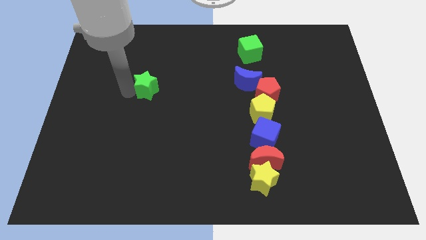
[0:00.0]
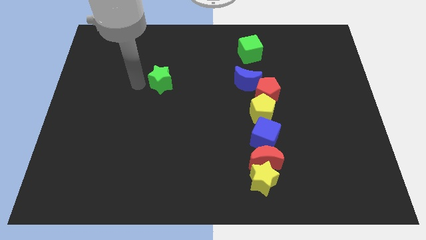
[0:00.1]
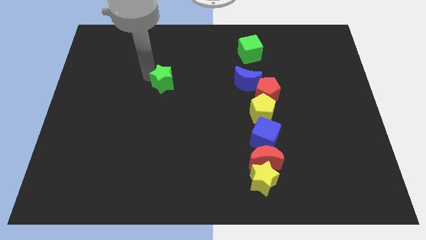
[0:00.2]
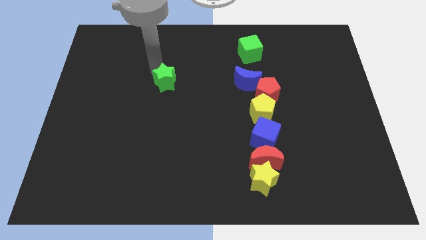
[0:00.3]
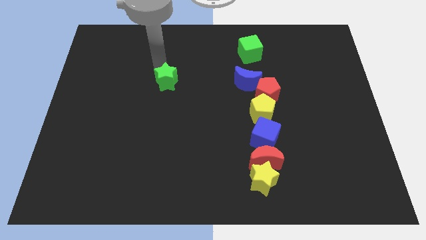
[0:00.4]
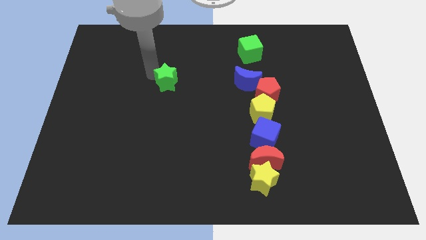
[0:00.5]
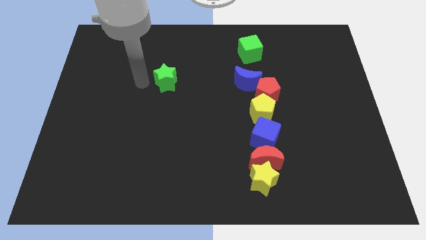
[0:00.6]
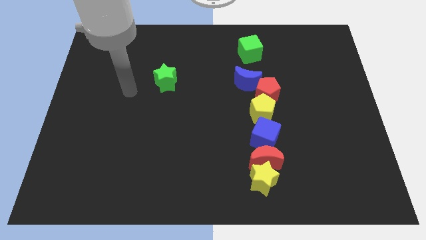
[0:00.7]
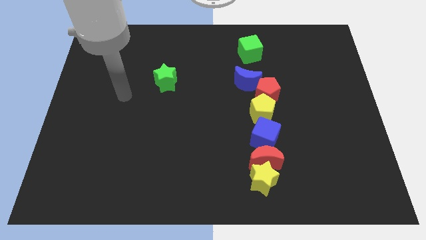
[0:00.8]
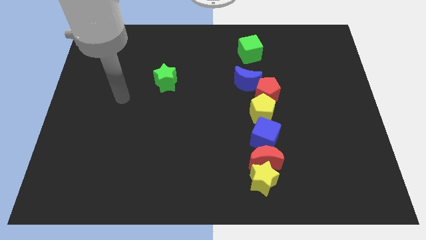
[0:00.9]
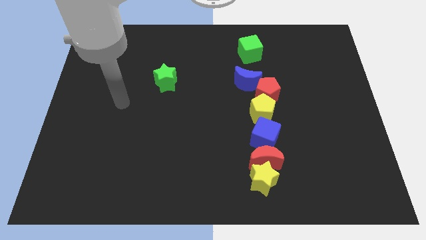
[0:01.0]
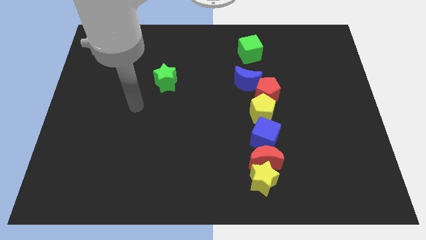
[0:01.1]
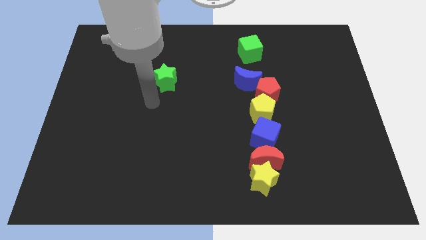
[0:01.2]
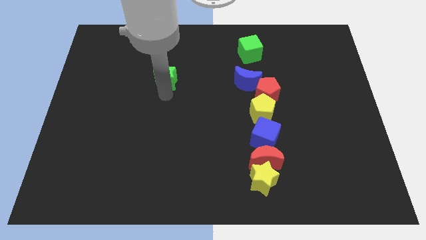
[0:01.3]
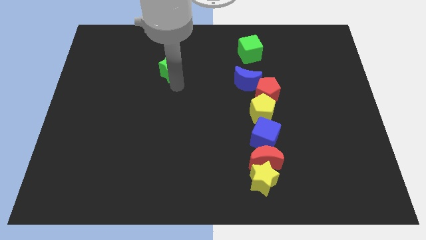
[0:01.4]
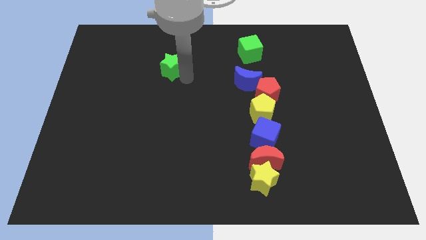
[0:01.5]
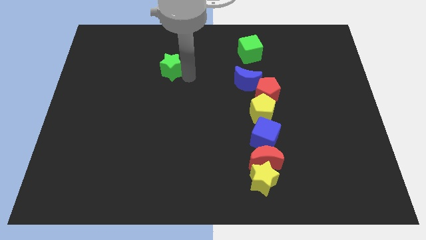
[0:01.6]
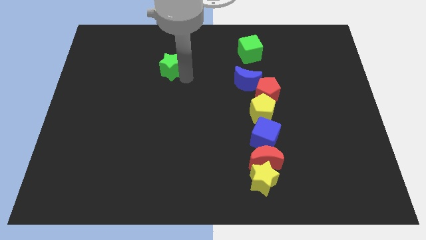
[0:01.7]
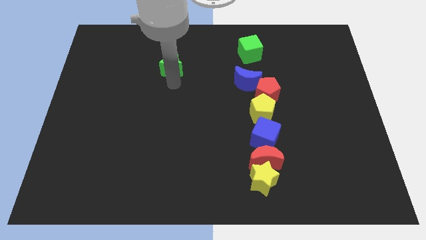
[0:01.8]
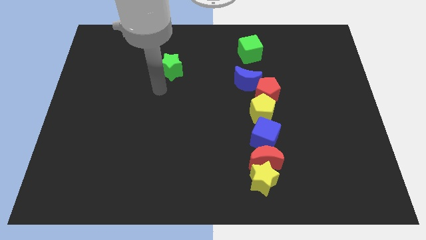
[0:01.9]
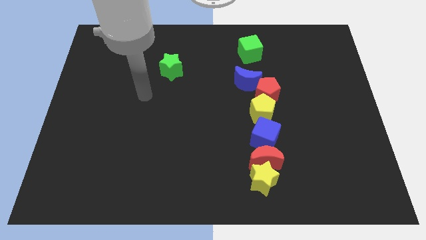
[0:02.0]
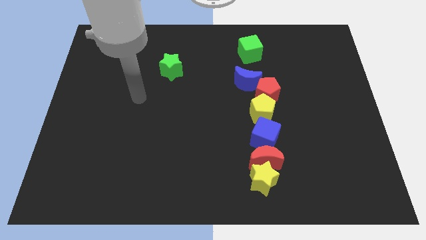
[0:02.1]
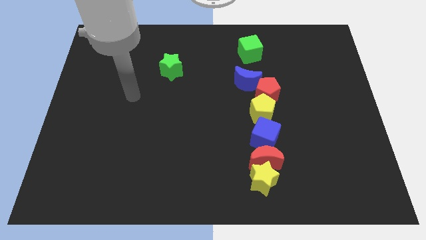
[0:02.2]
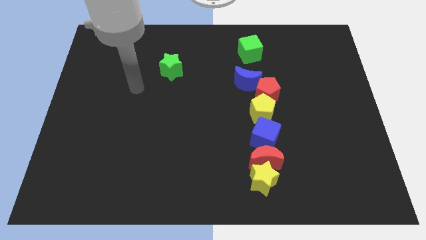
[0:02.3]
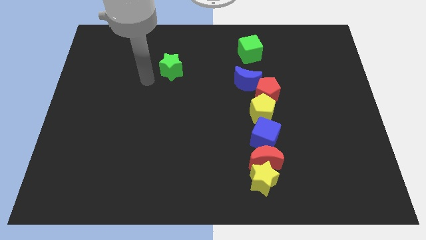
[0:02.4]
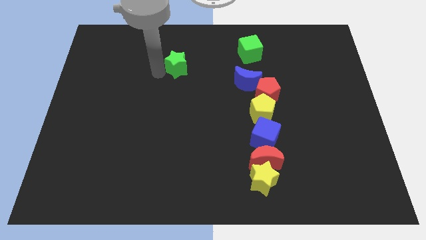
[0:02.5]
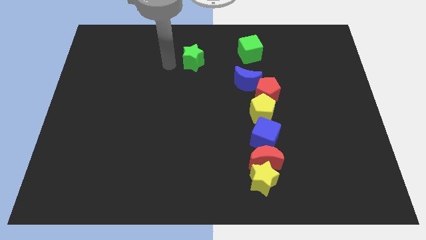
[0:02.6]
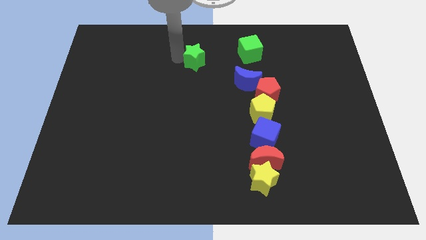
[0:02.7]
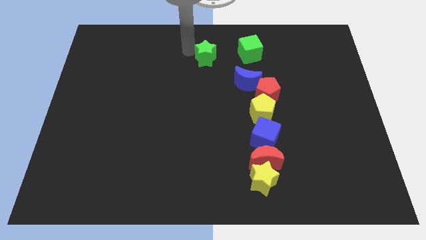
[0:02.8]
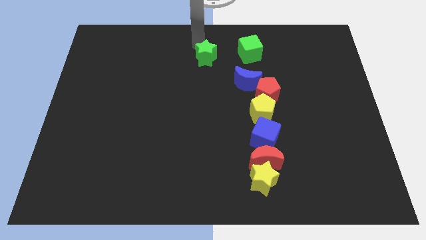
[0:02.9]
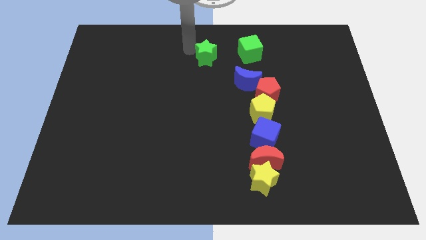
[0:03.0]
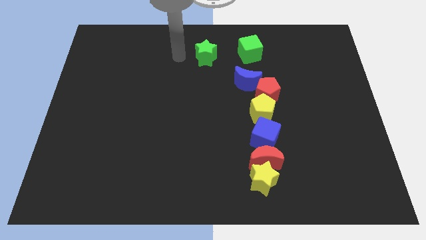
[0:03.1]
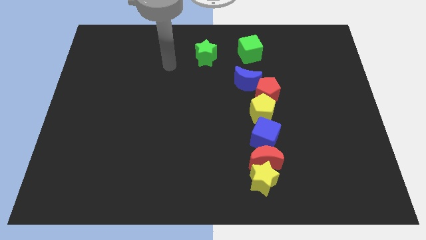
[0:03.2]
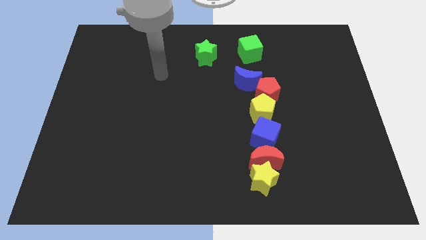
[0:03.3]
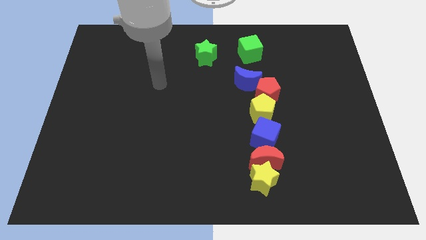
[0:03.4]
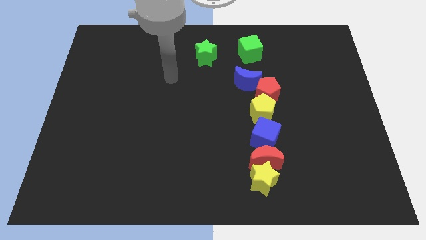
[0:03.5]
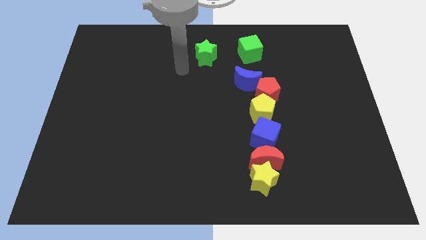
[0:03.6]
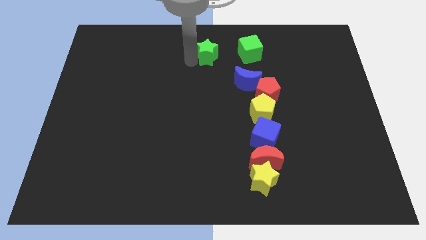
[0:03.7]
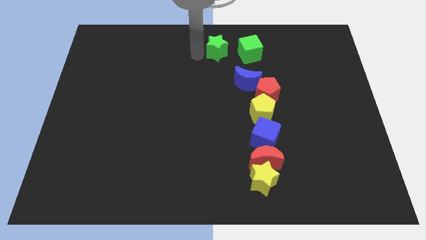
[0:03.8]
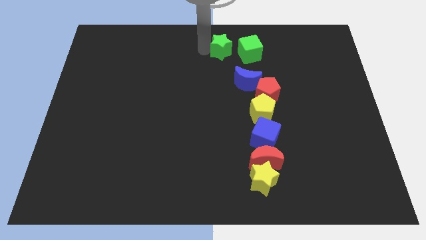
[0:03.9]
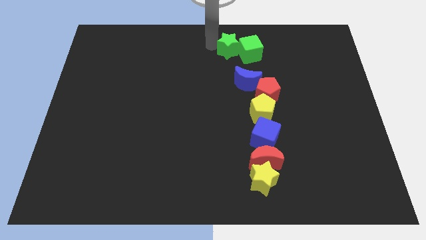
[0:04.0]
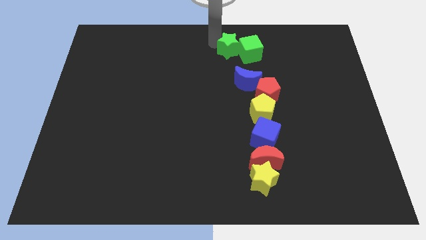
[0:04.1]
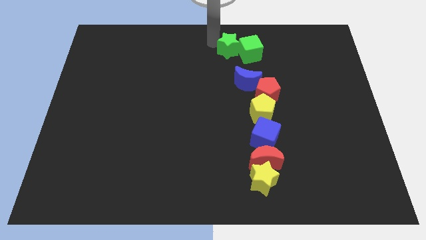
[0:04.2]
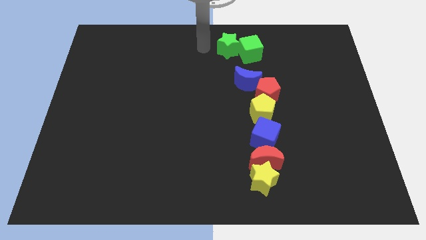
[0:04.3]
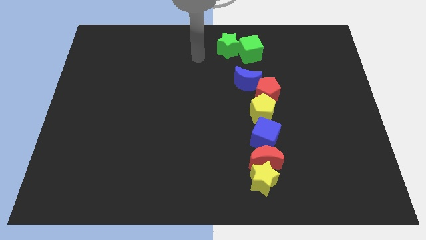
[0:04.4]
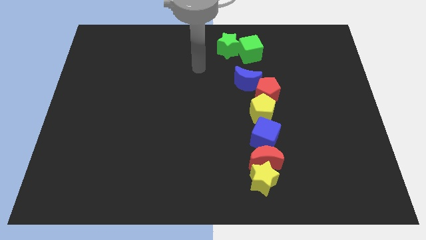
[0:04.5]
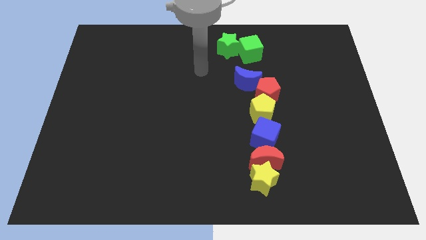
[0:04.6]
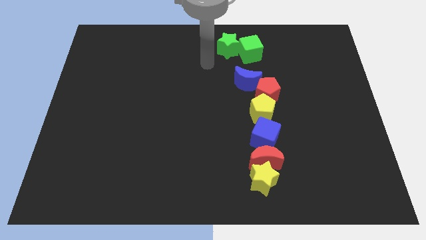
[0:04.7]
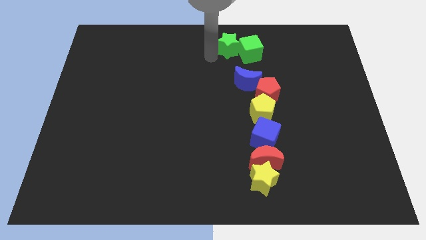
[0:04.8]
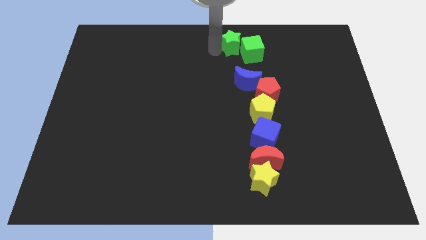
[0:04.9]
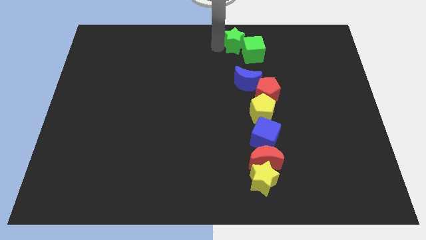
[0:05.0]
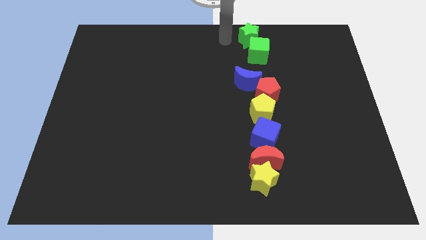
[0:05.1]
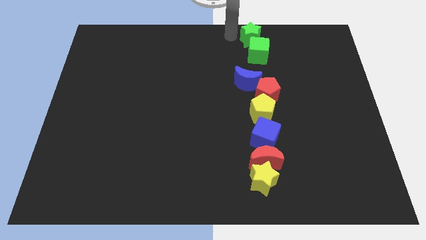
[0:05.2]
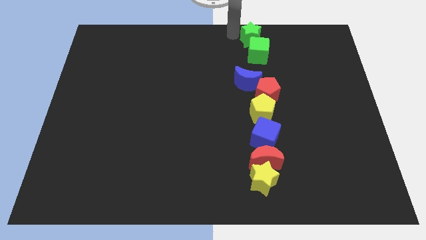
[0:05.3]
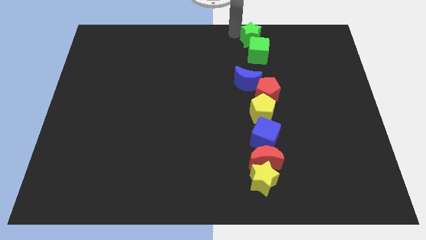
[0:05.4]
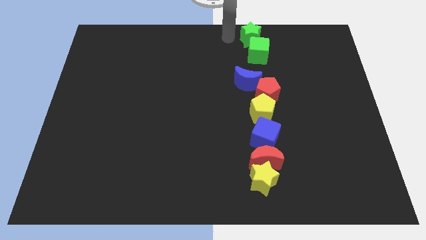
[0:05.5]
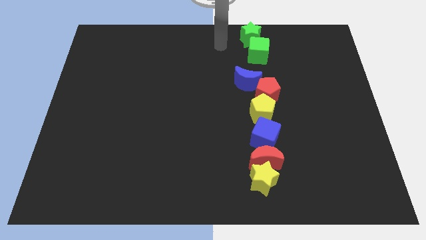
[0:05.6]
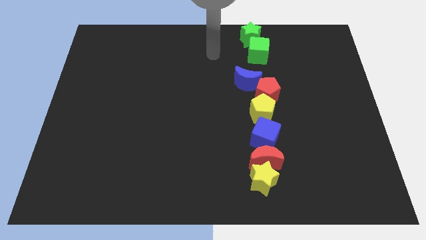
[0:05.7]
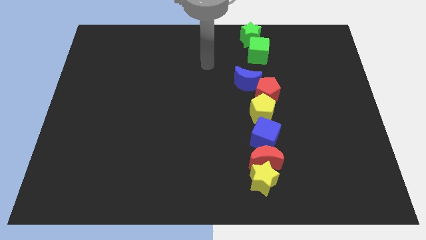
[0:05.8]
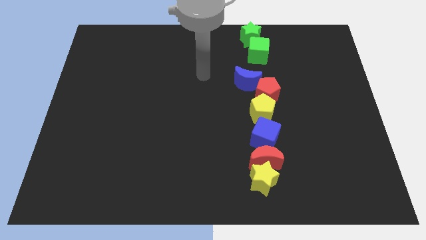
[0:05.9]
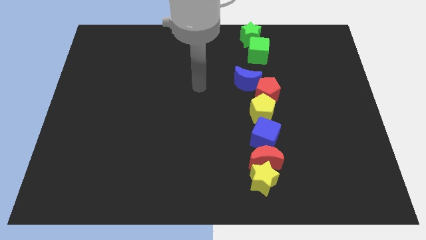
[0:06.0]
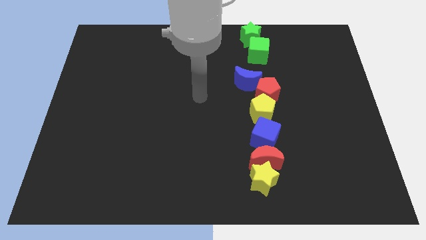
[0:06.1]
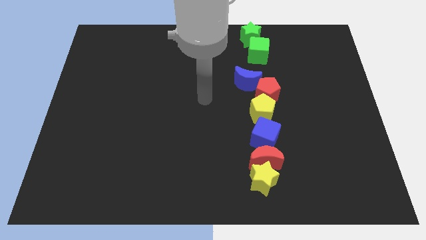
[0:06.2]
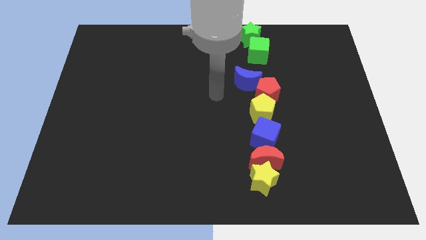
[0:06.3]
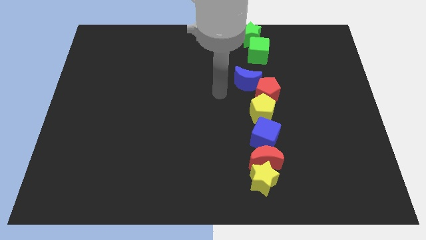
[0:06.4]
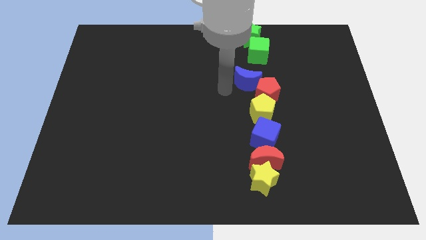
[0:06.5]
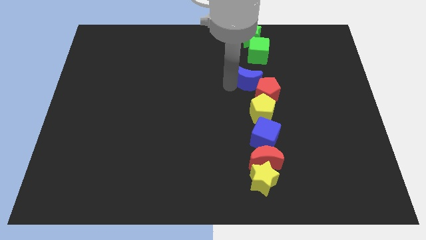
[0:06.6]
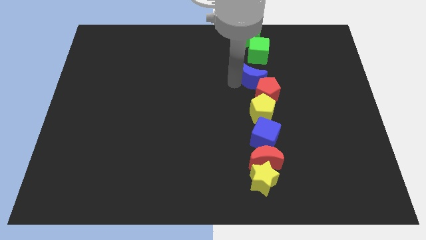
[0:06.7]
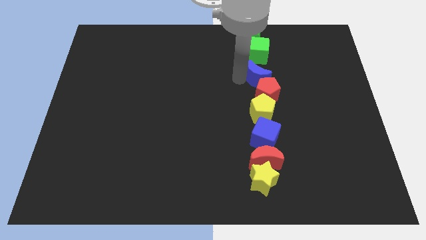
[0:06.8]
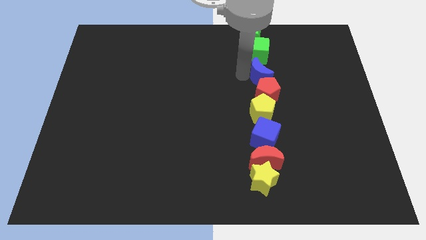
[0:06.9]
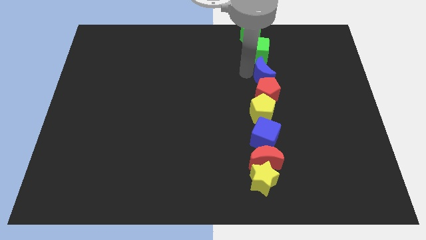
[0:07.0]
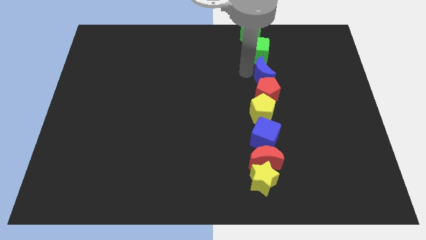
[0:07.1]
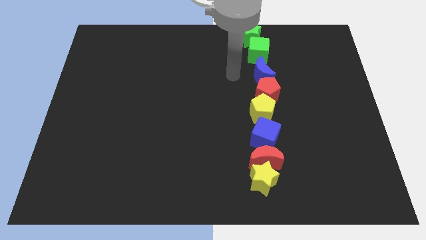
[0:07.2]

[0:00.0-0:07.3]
place the green blocks and blue crescent in the line

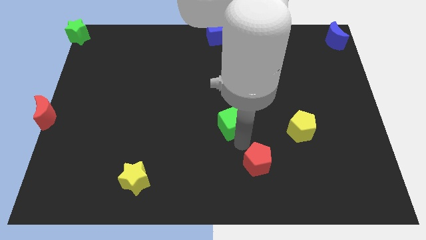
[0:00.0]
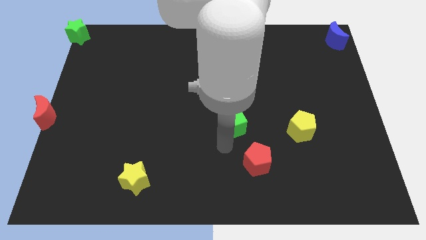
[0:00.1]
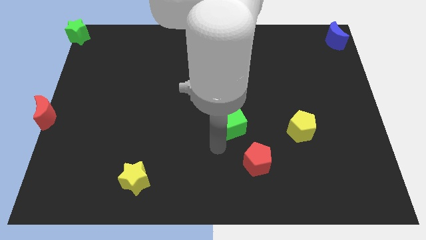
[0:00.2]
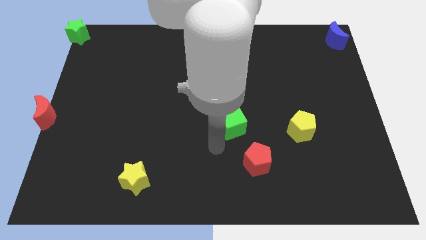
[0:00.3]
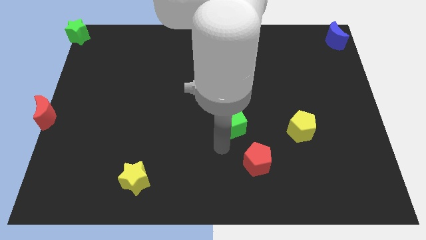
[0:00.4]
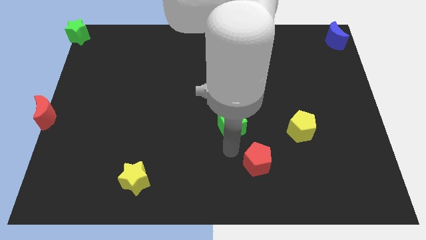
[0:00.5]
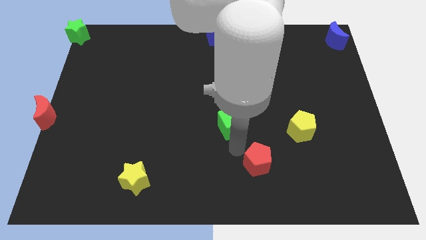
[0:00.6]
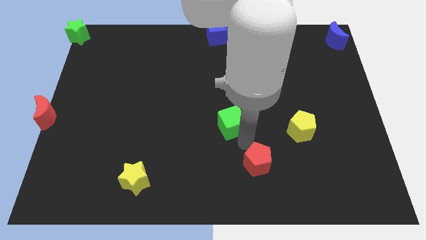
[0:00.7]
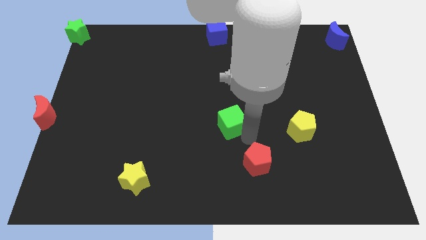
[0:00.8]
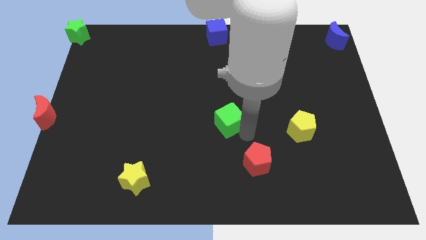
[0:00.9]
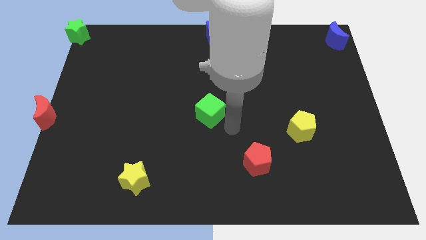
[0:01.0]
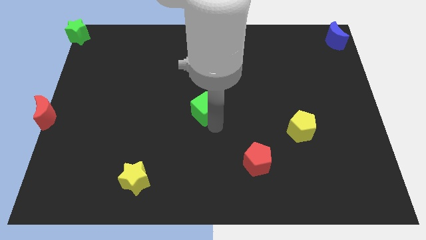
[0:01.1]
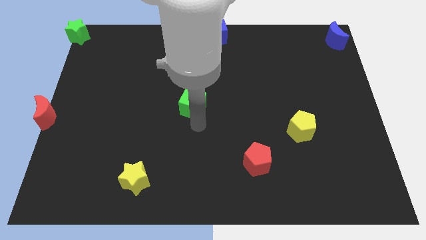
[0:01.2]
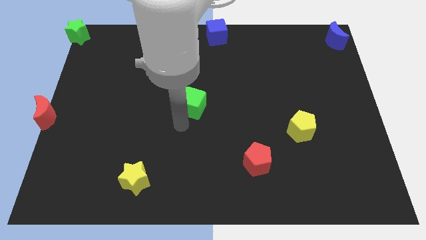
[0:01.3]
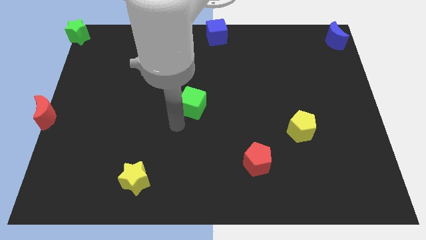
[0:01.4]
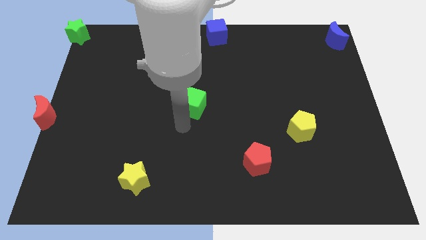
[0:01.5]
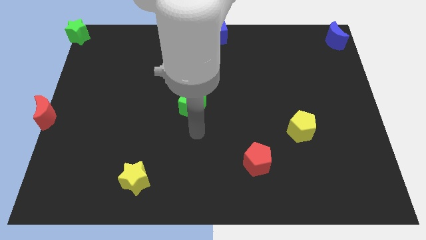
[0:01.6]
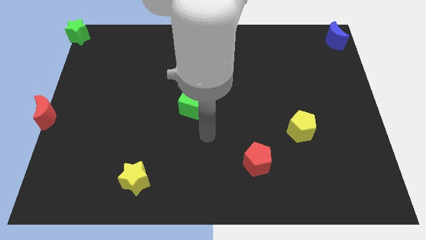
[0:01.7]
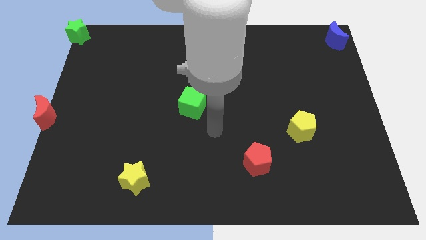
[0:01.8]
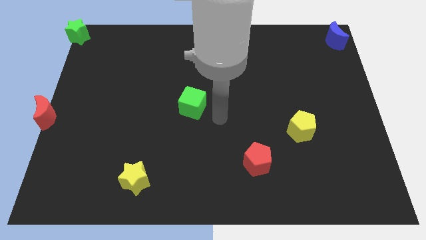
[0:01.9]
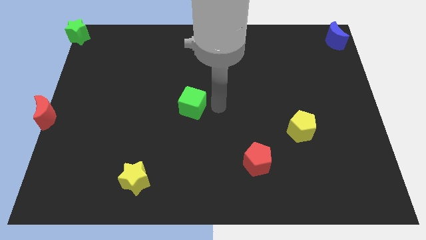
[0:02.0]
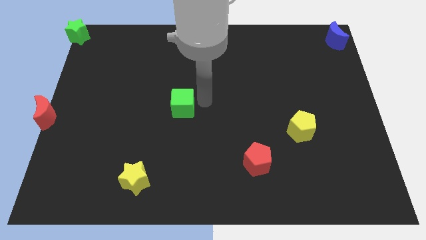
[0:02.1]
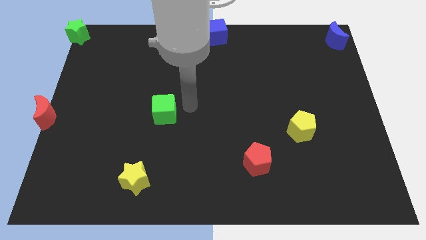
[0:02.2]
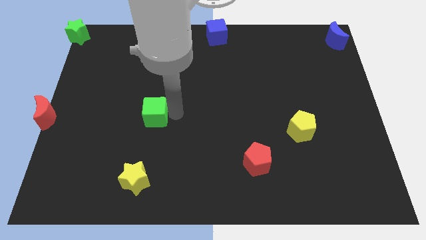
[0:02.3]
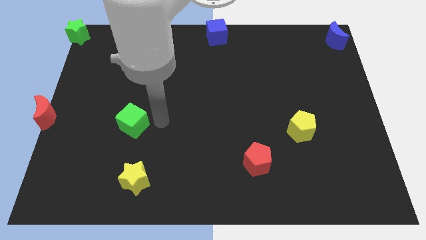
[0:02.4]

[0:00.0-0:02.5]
place the green cube vertically above the yellow star
